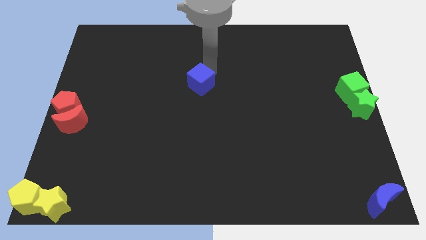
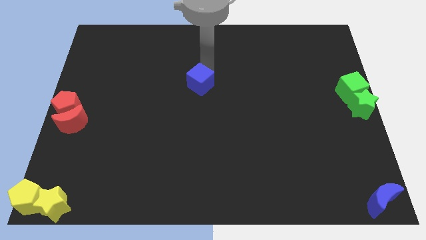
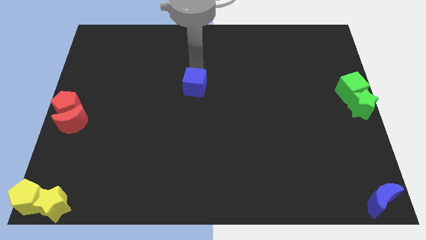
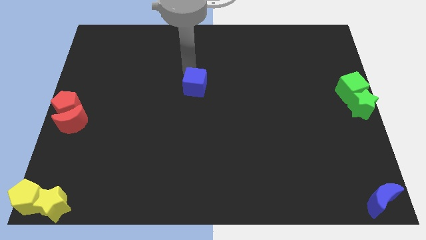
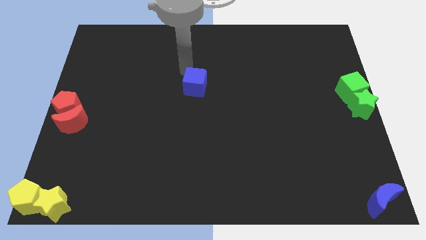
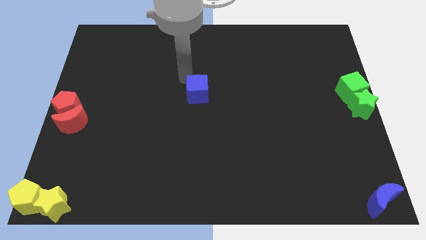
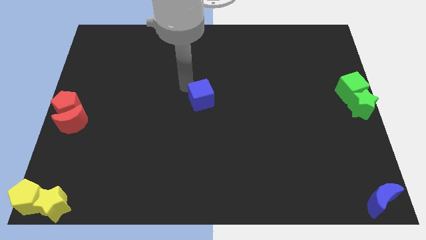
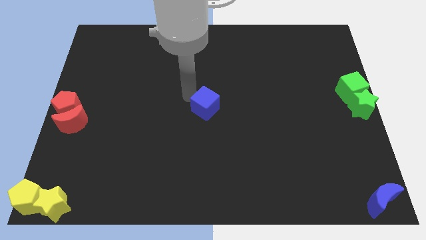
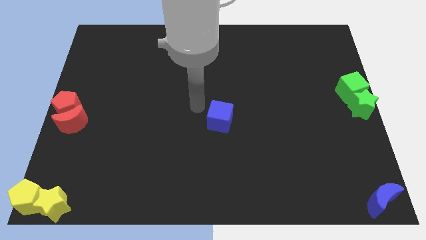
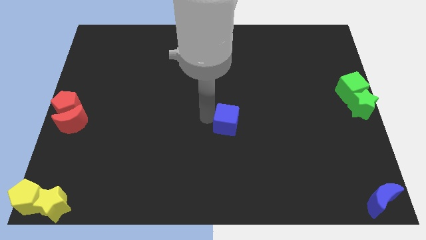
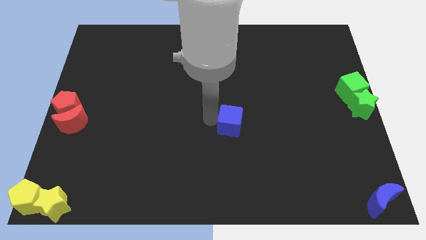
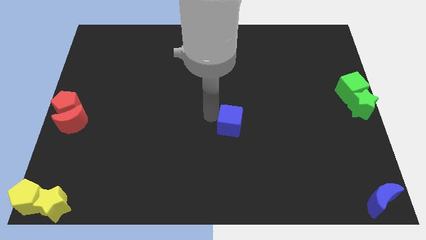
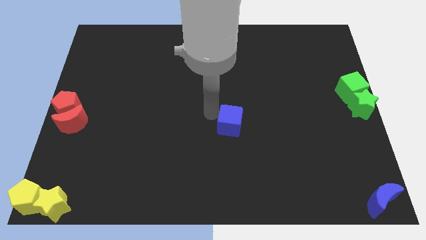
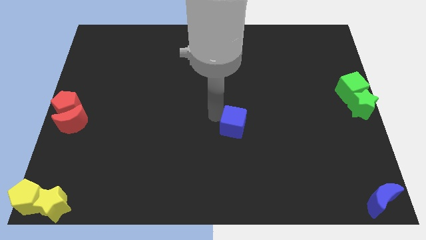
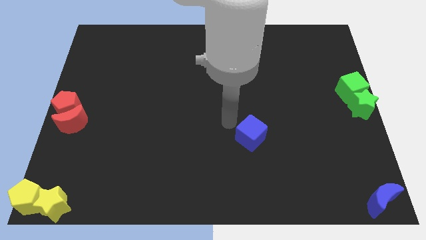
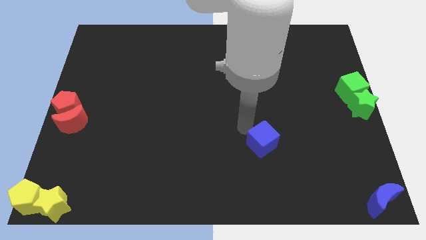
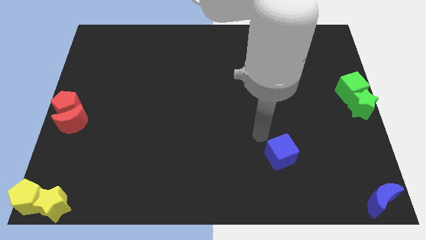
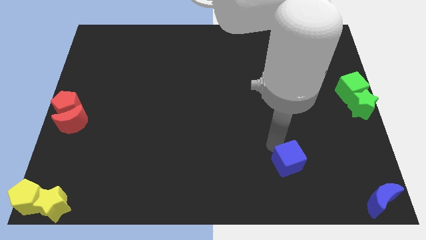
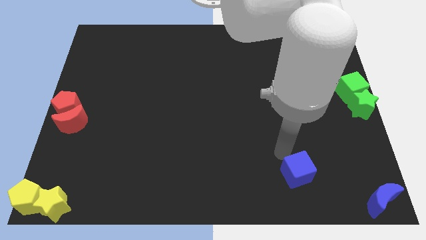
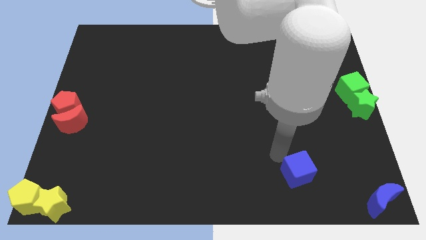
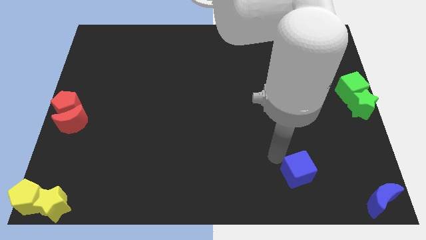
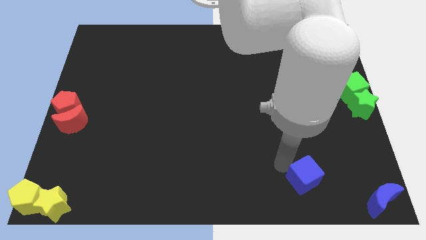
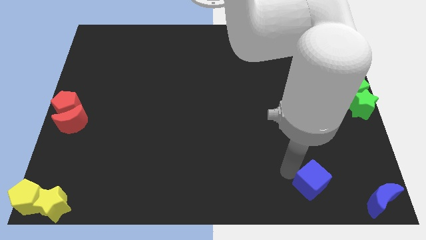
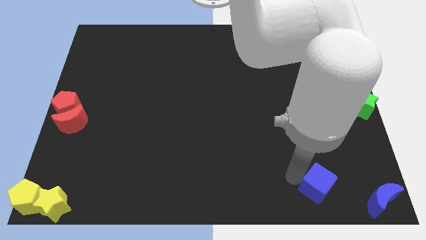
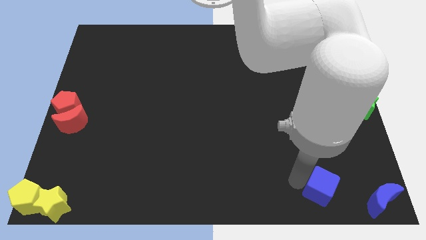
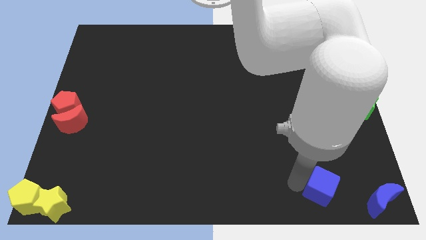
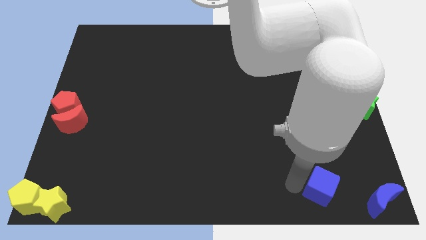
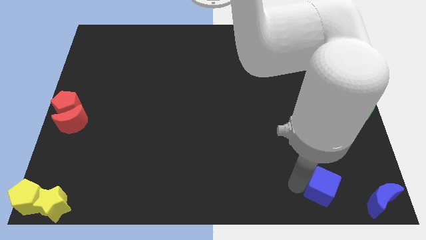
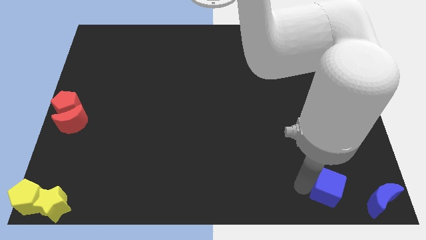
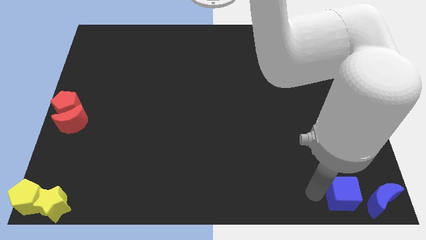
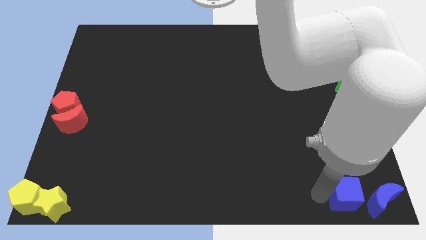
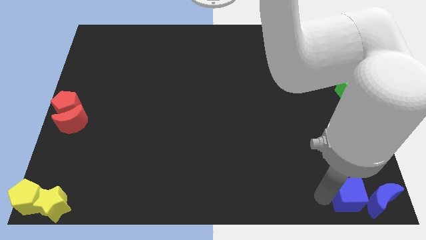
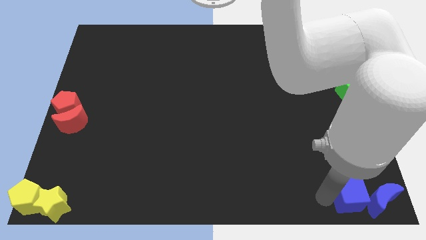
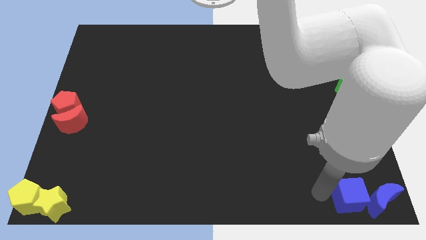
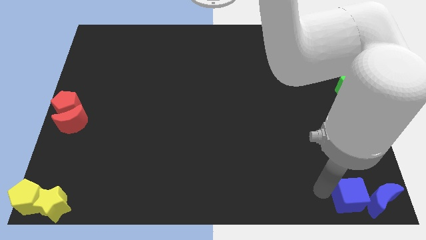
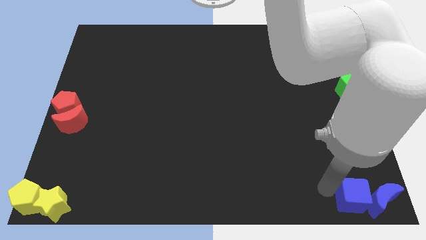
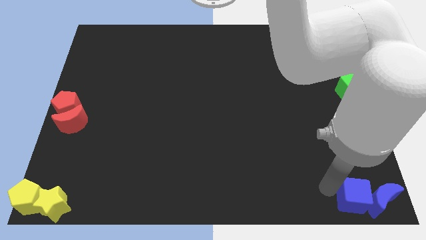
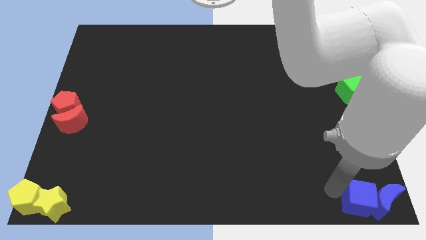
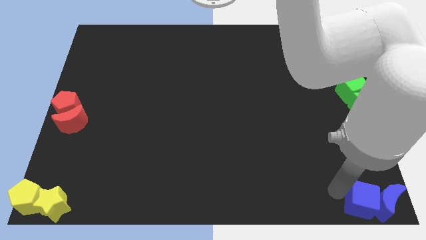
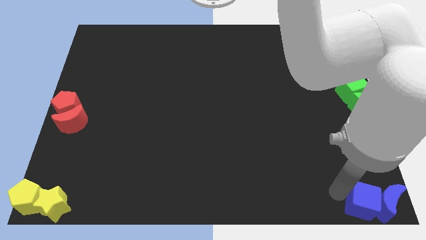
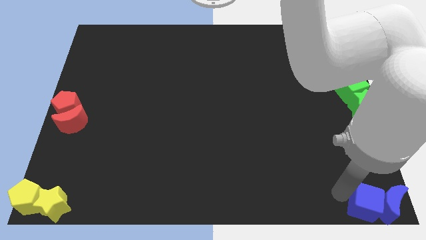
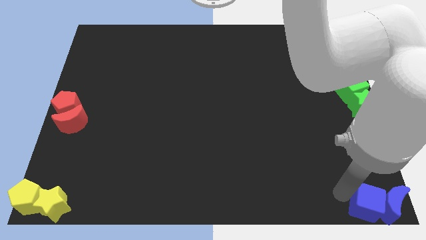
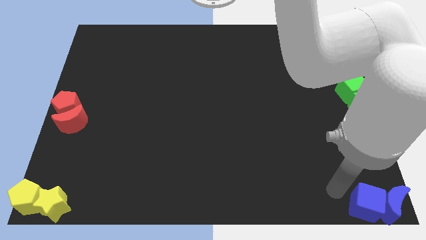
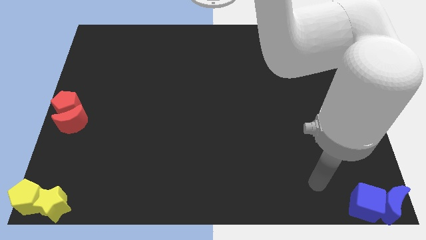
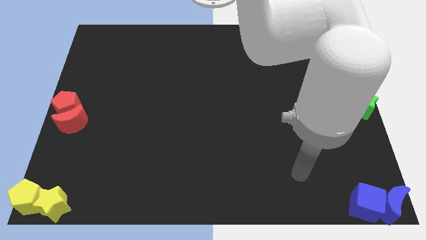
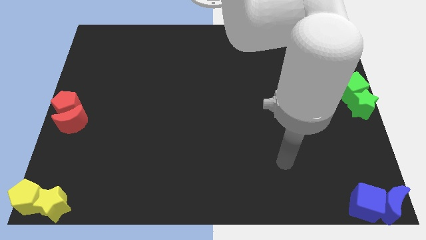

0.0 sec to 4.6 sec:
push the blue cubeblue crescent towards the bottom right corner of the board

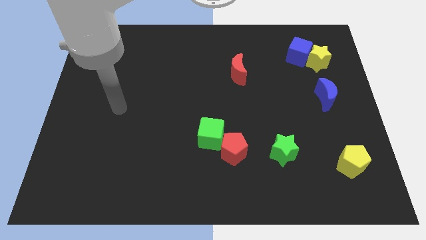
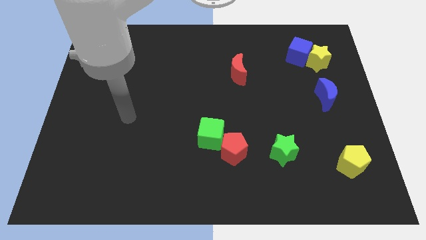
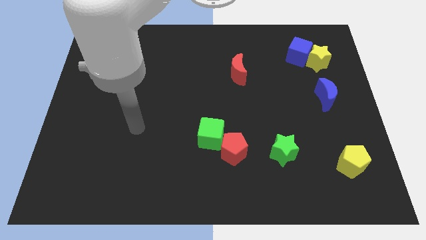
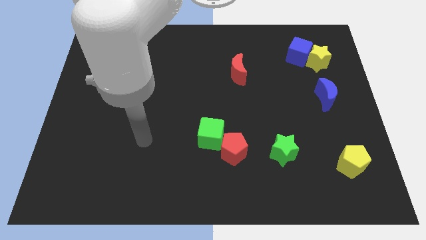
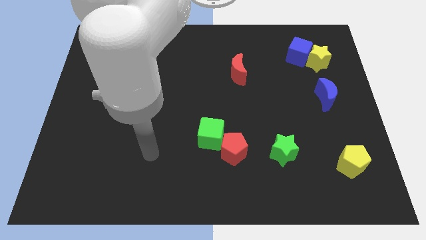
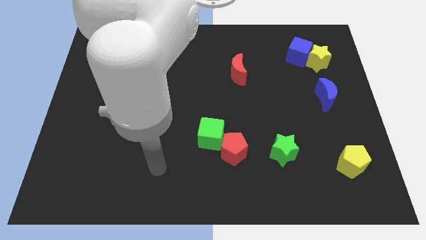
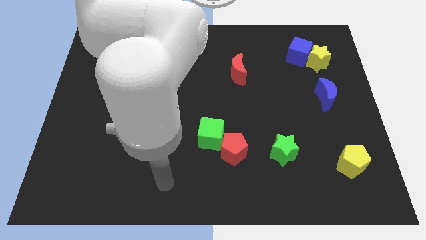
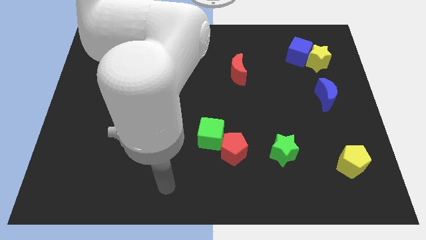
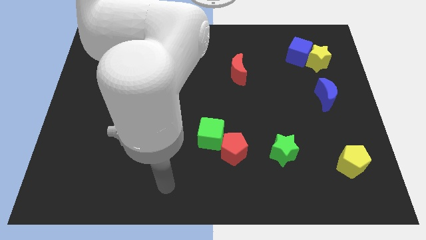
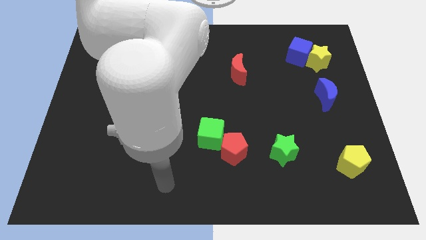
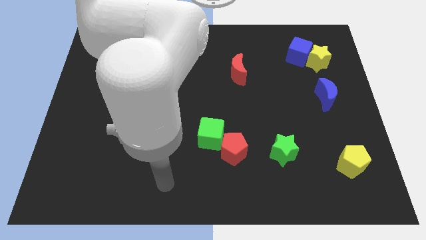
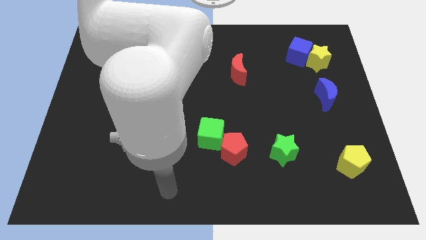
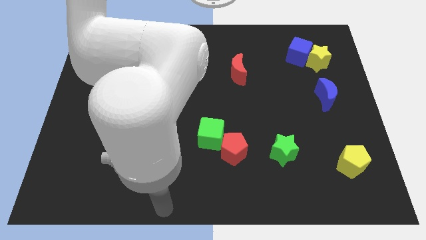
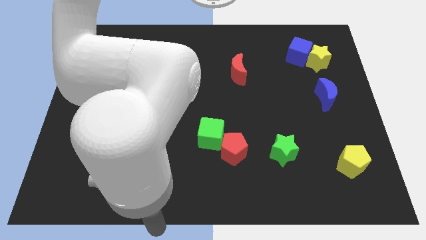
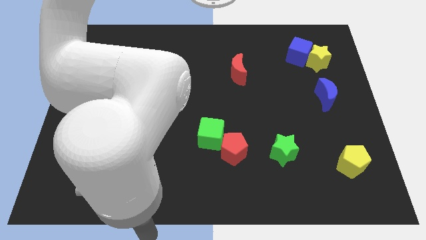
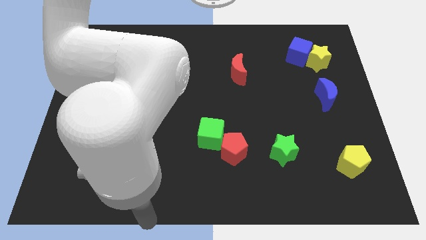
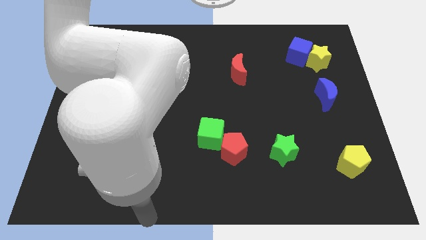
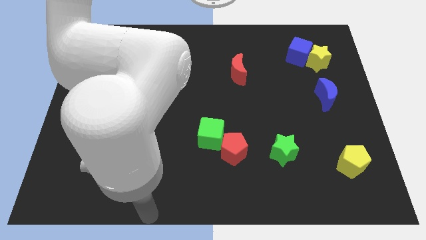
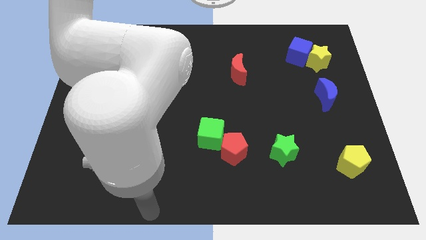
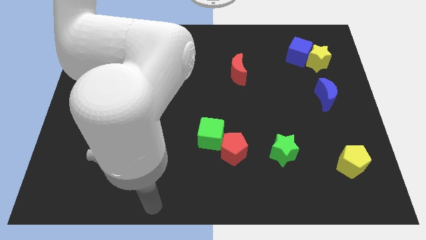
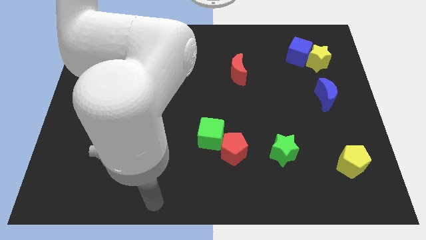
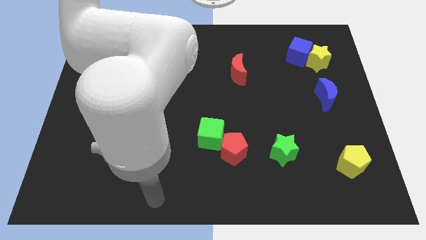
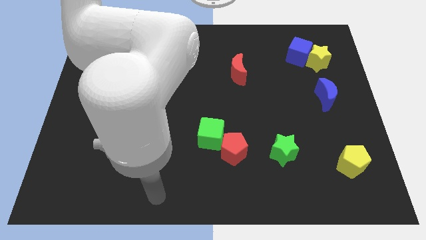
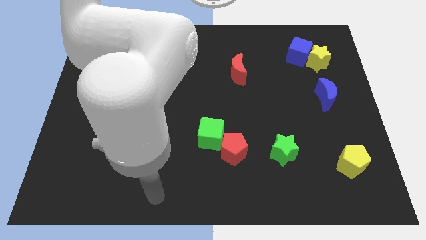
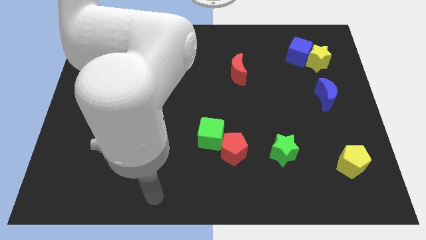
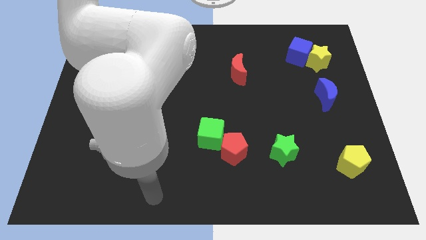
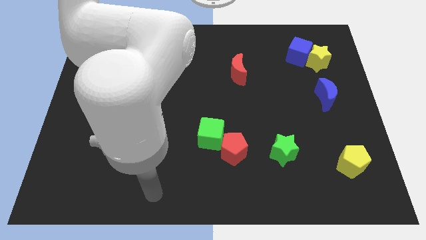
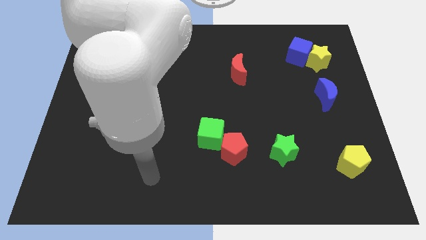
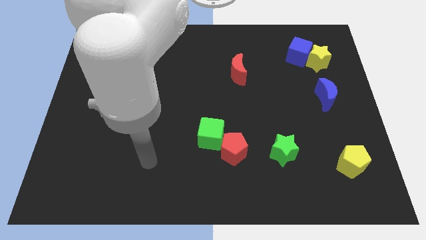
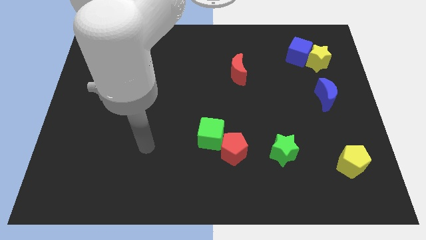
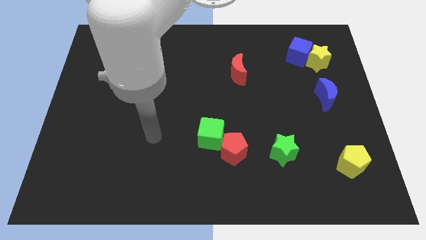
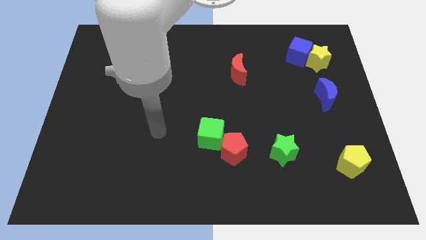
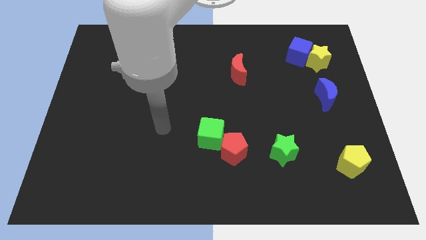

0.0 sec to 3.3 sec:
place the arm parallel to the left side of the green cube

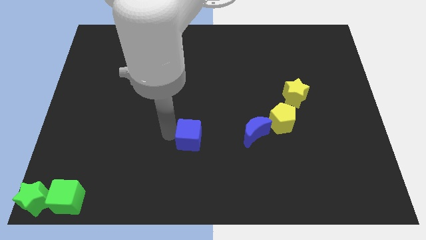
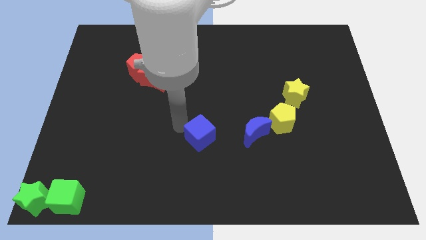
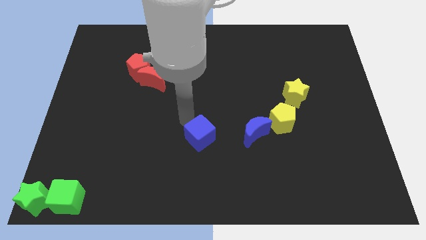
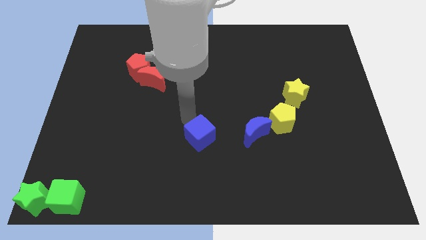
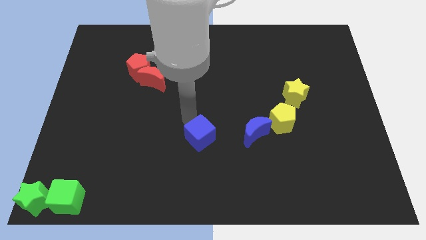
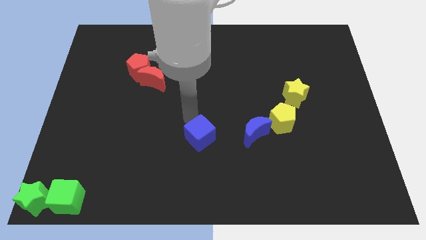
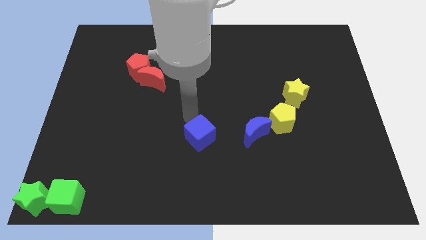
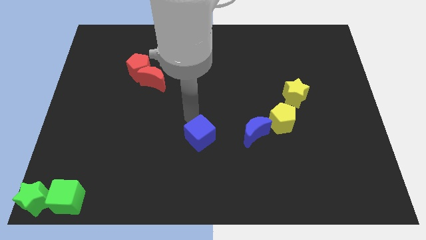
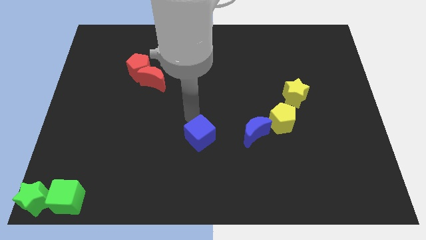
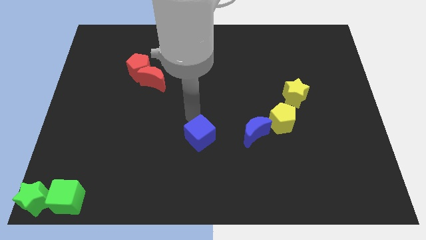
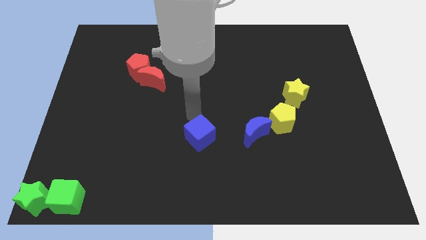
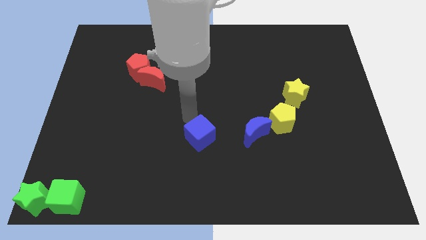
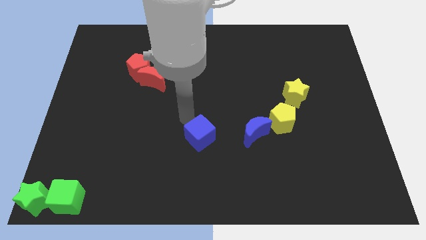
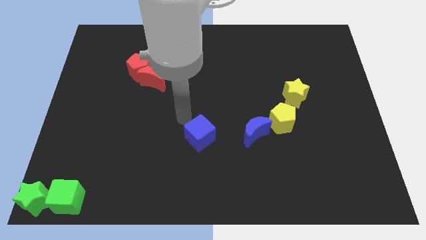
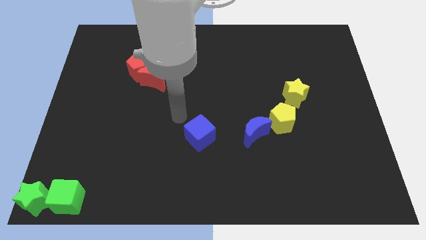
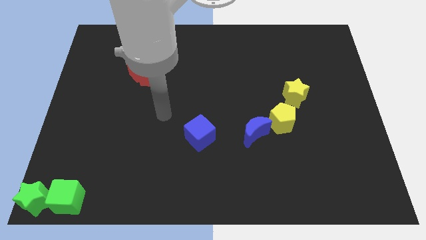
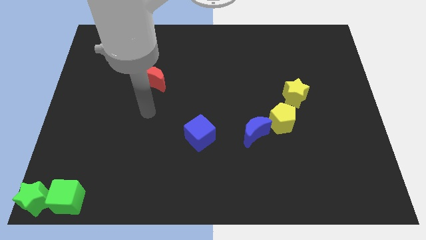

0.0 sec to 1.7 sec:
slightly push blue cube close to the blue moon
